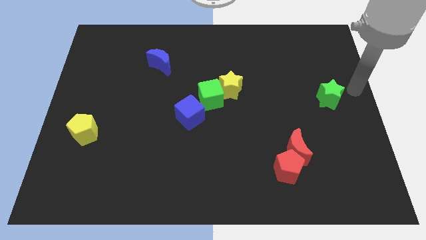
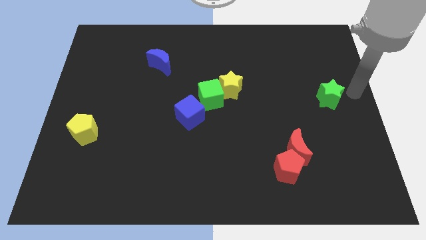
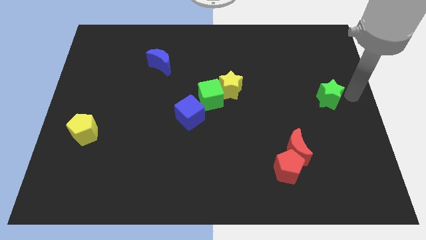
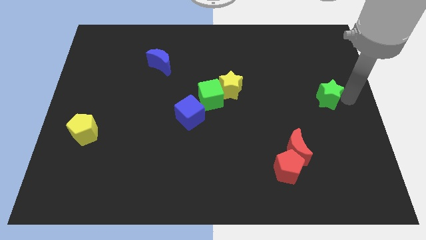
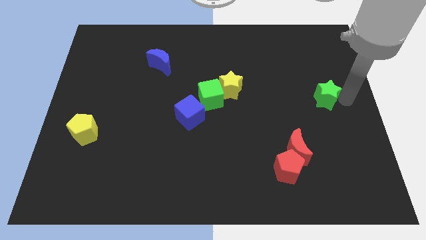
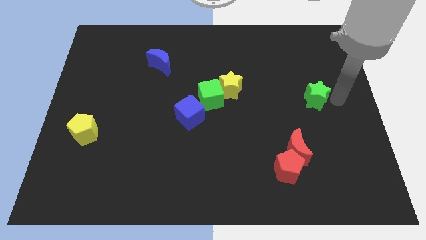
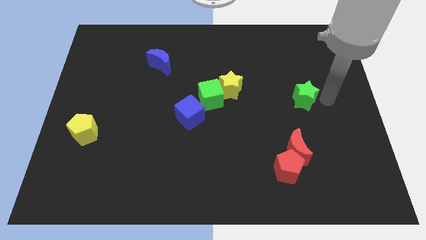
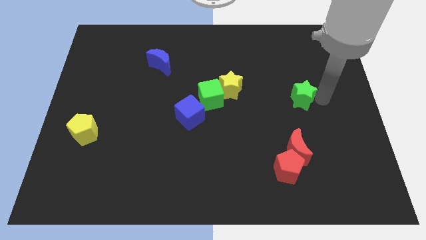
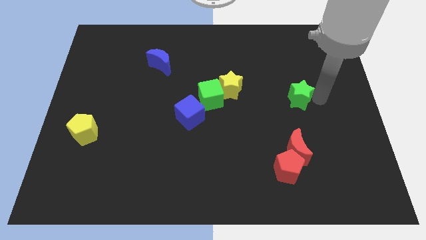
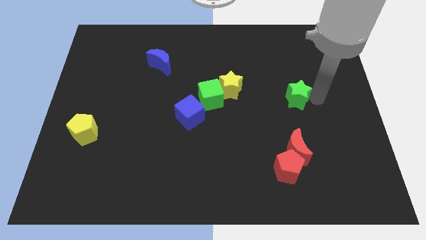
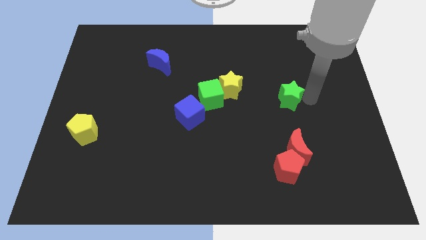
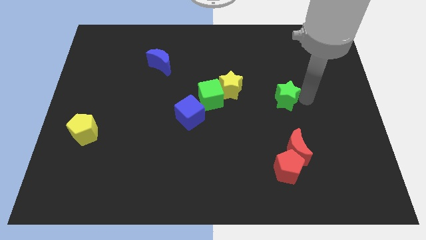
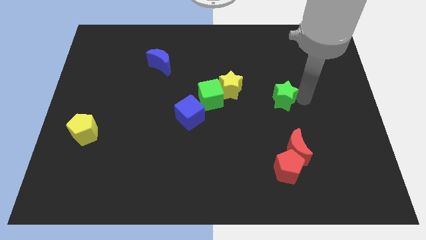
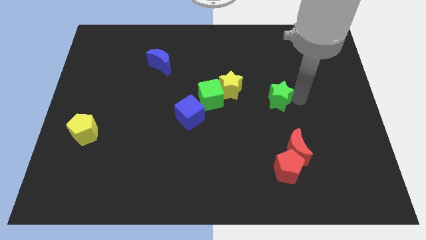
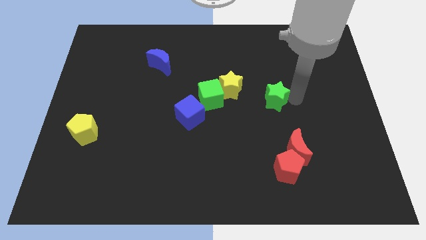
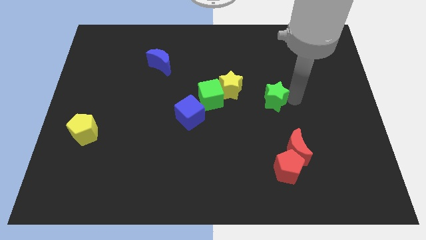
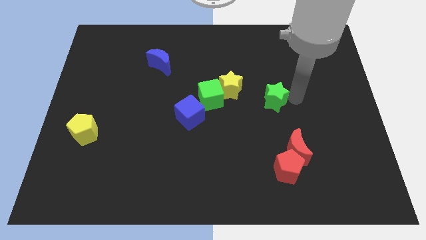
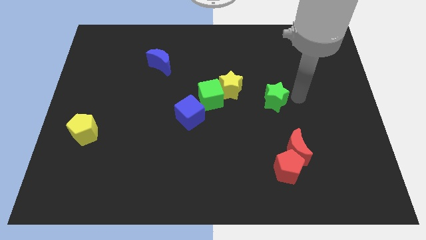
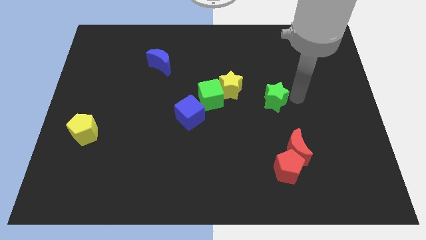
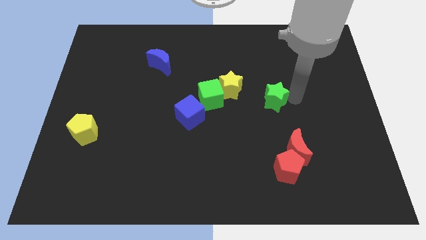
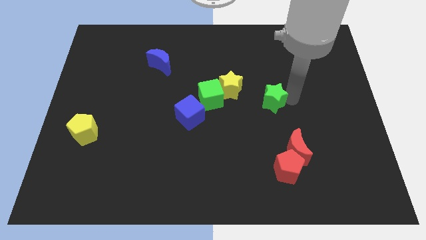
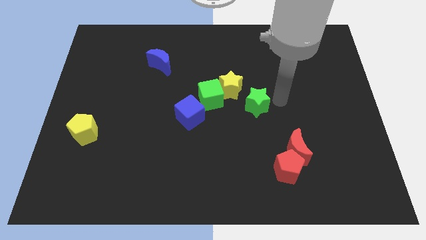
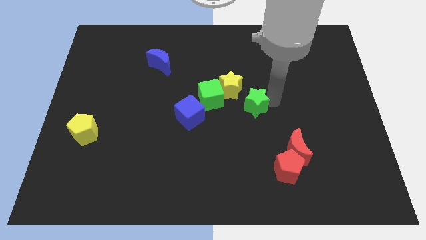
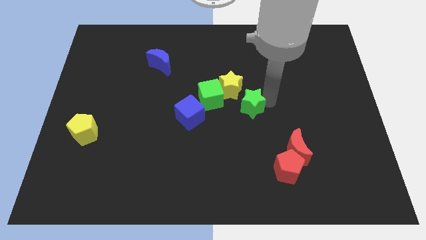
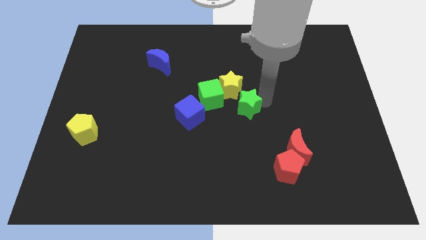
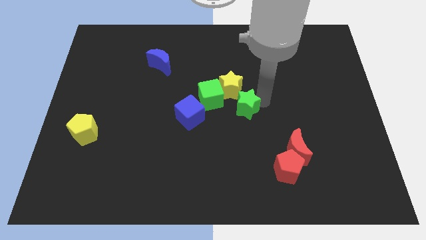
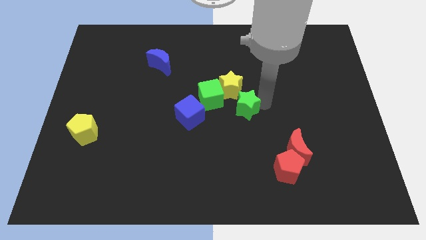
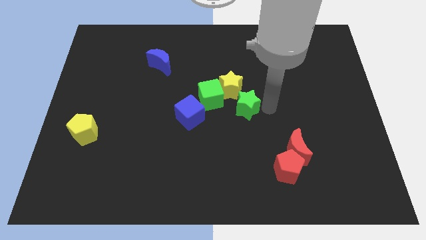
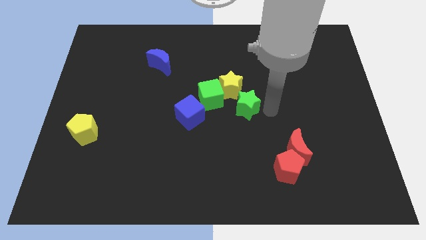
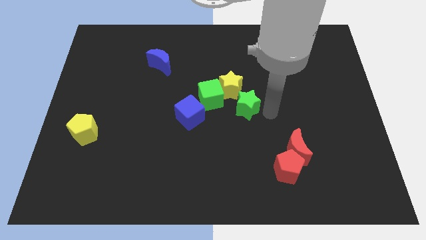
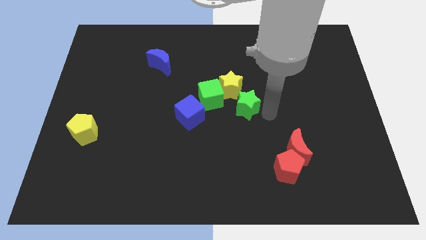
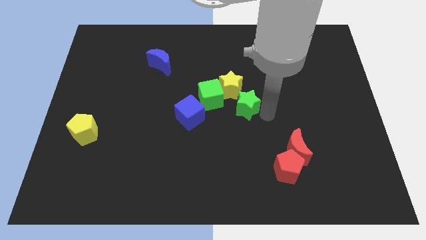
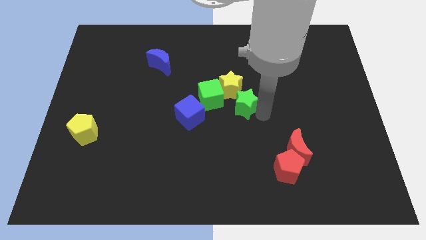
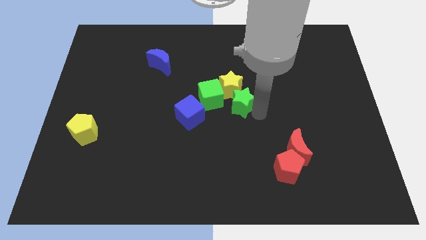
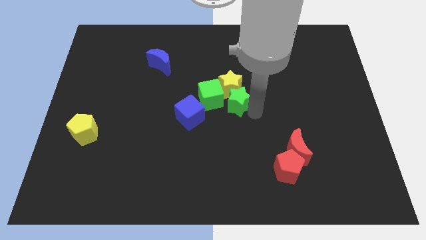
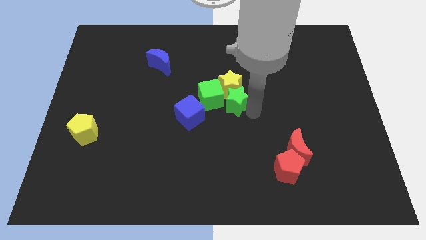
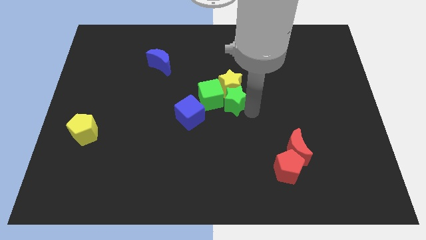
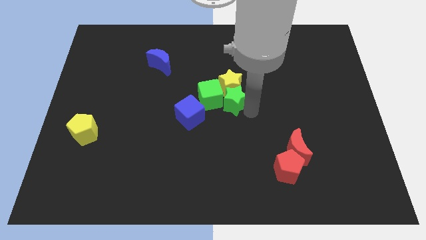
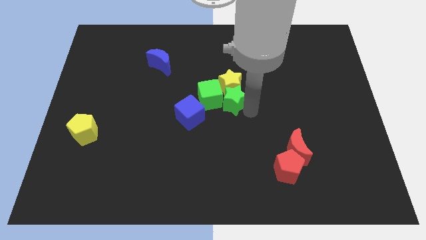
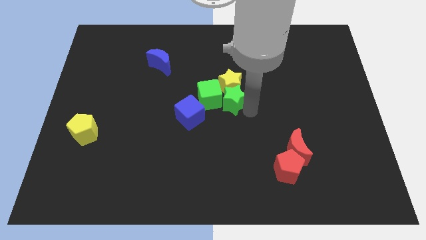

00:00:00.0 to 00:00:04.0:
place the green star below the yellow star

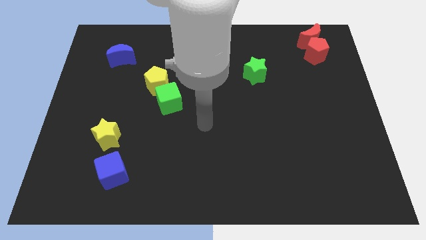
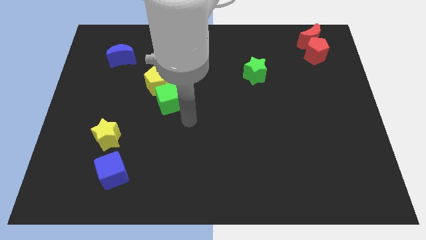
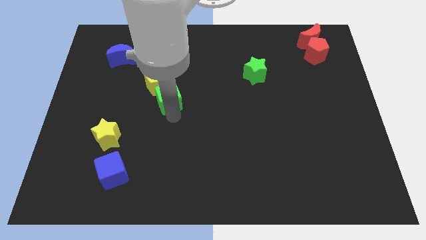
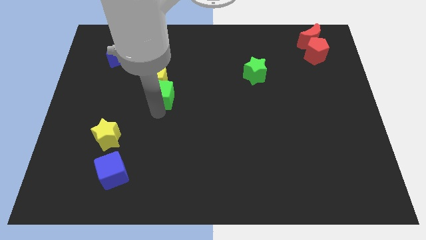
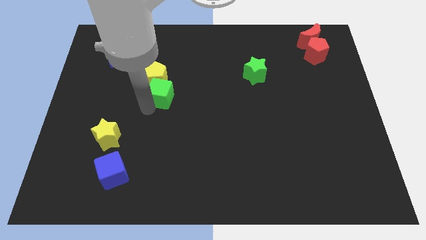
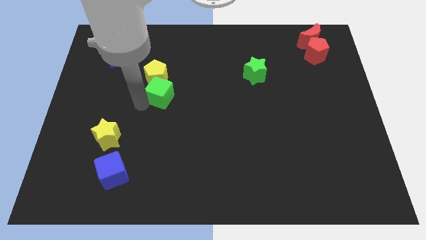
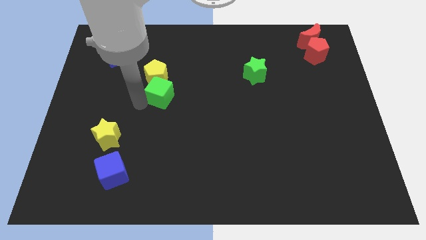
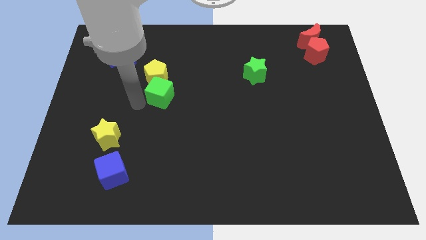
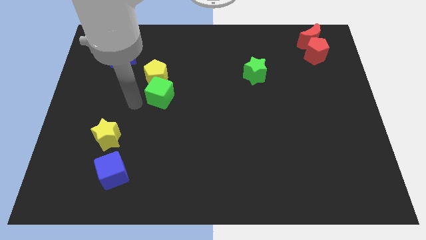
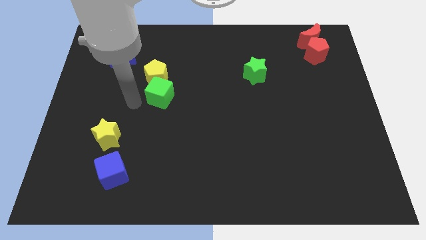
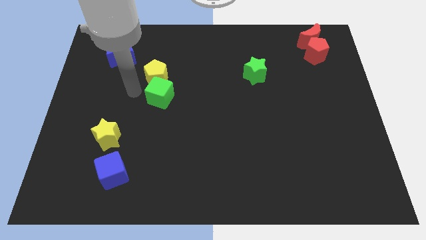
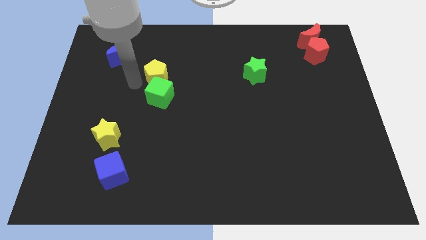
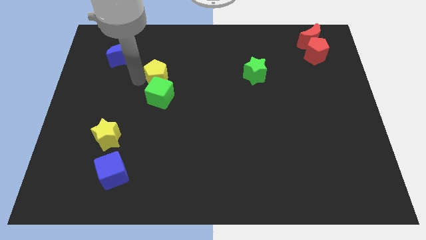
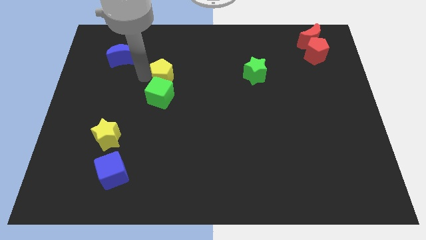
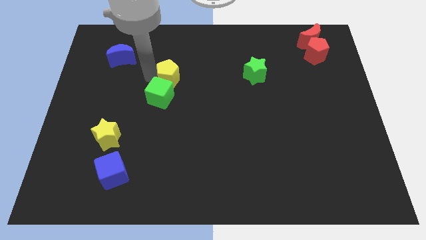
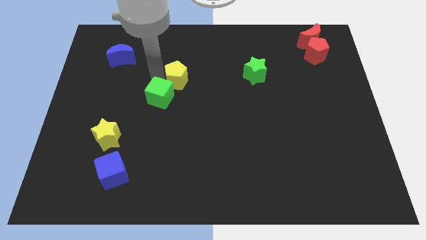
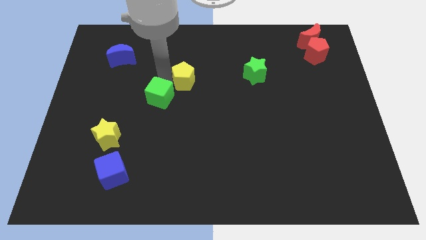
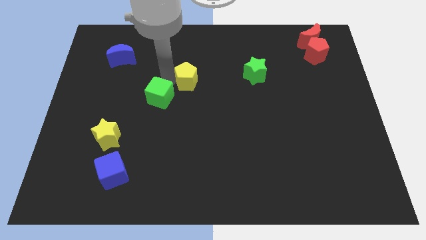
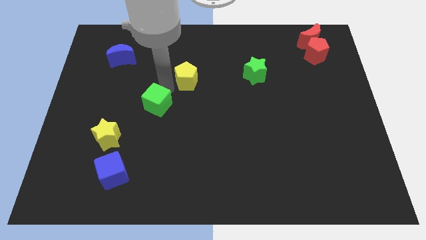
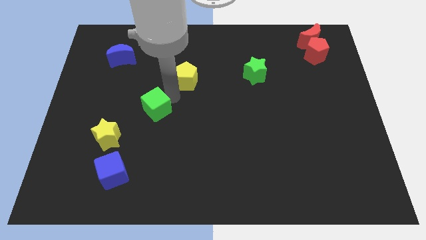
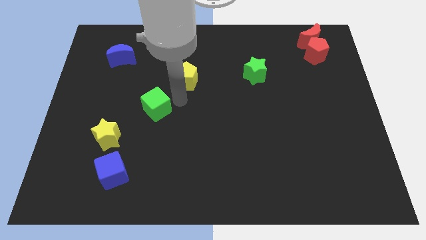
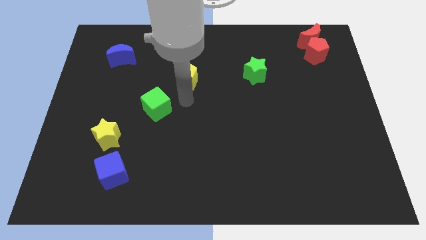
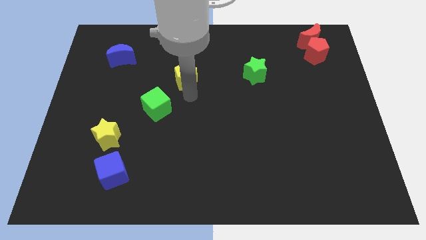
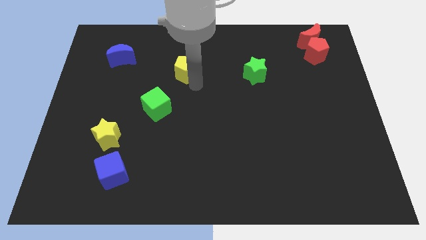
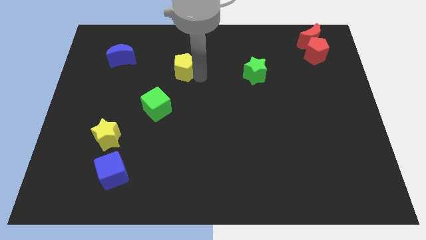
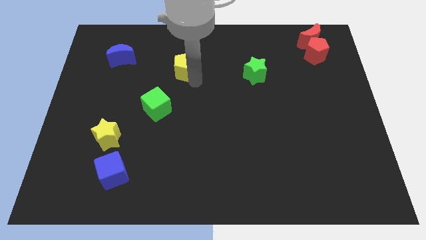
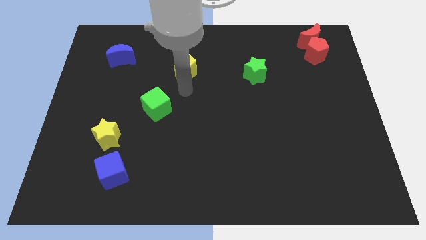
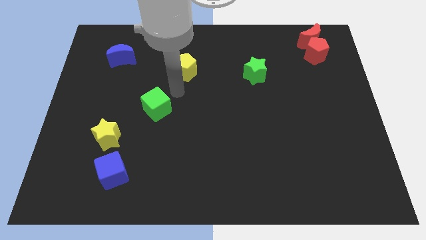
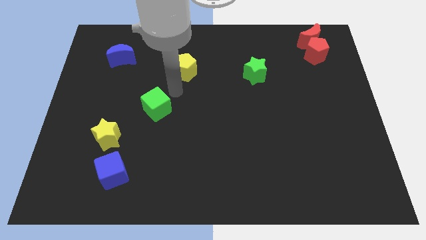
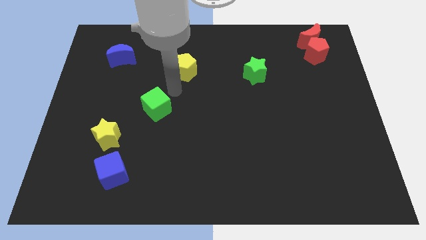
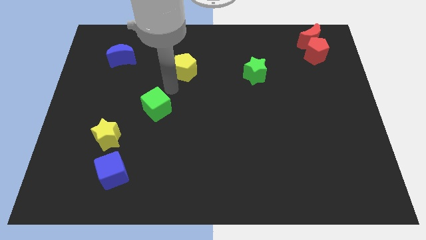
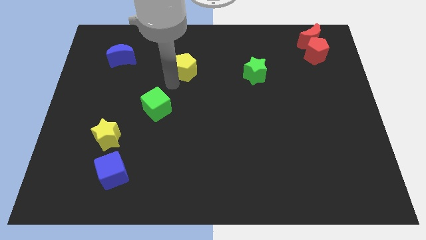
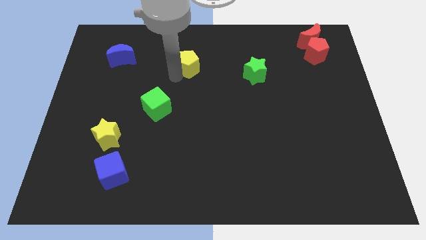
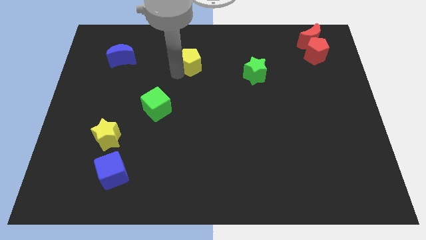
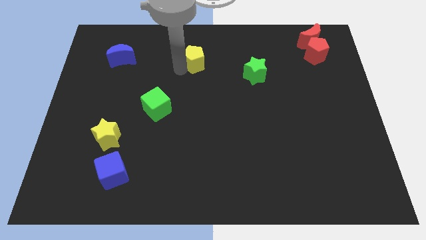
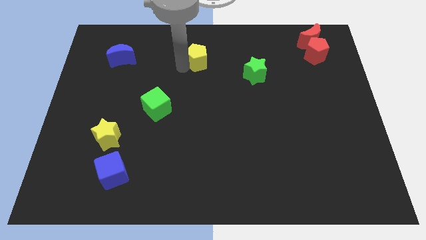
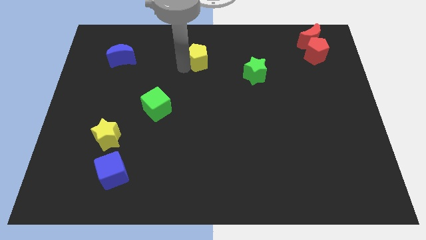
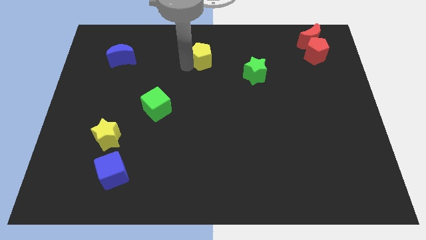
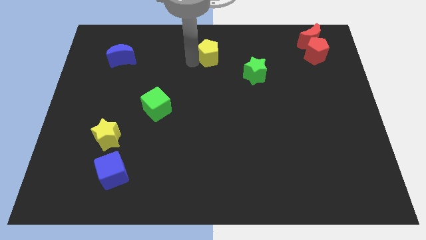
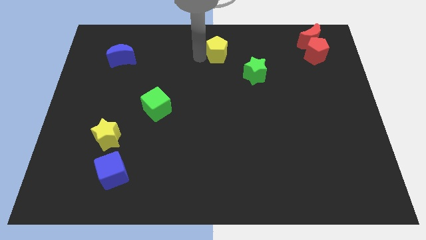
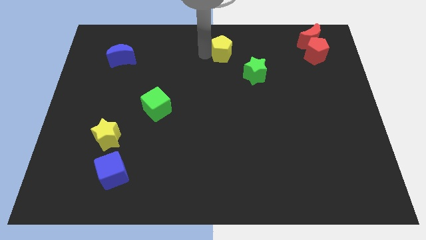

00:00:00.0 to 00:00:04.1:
move yellow pentagon towards top

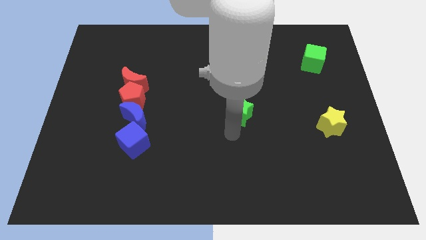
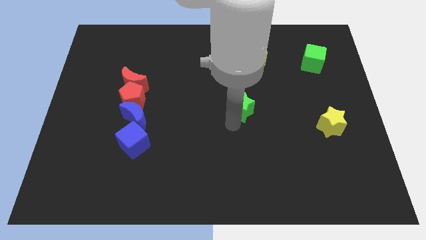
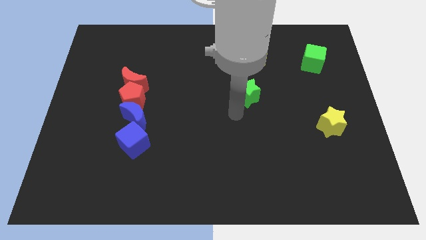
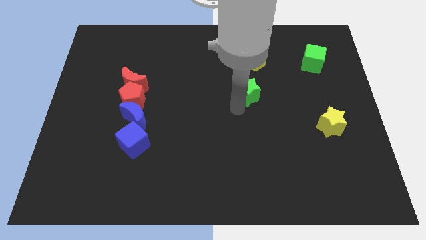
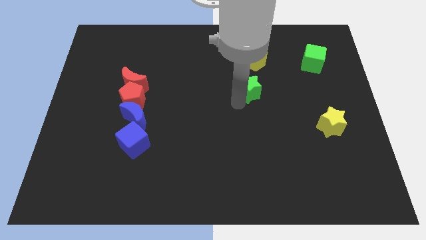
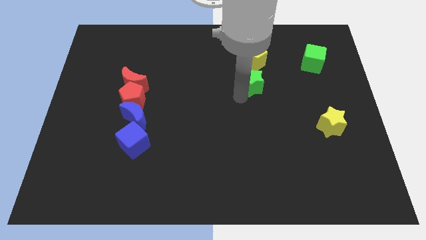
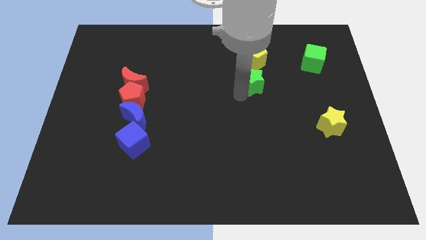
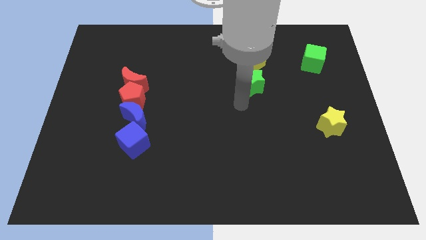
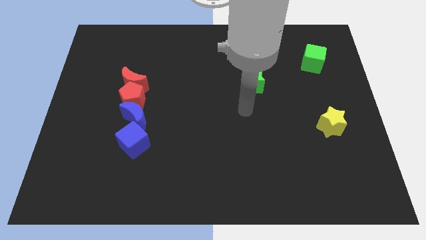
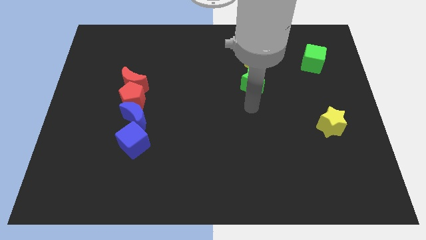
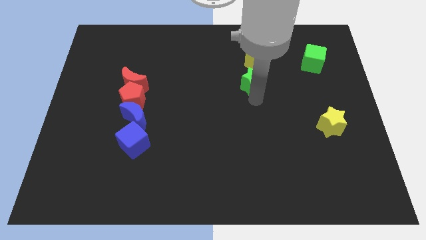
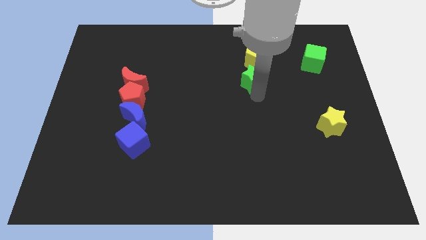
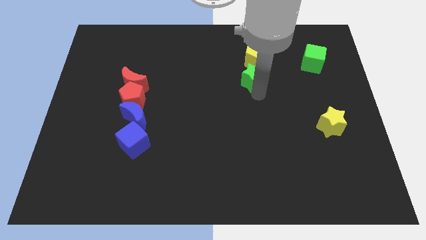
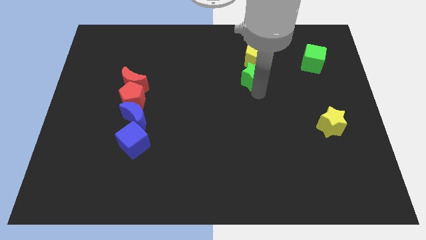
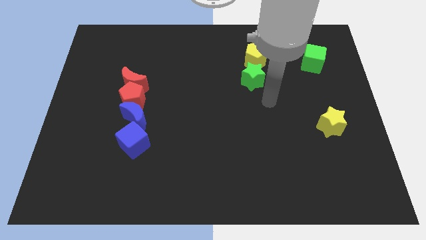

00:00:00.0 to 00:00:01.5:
move the green star towards the yellow pentagon
